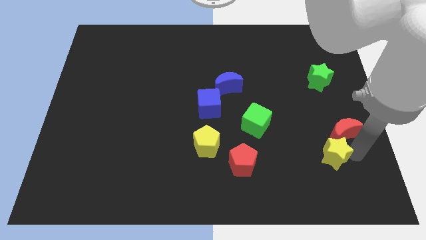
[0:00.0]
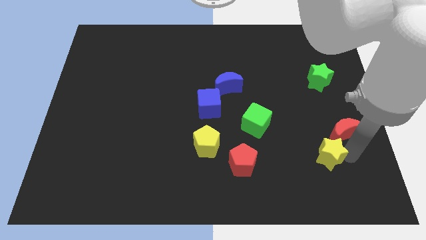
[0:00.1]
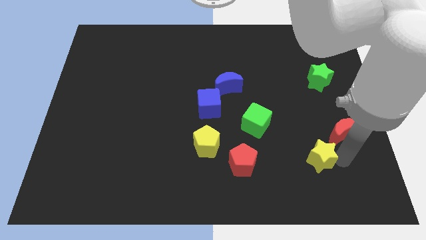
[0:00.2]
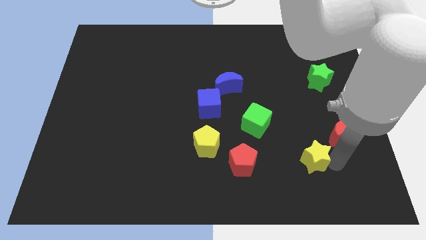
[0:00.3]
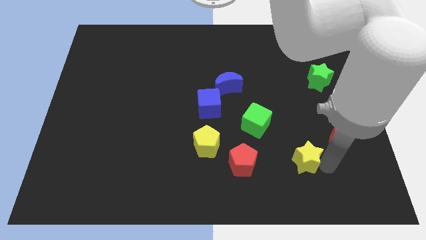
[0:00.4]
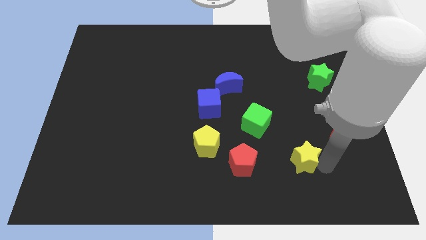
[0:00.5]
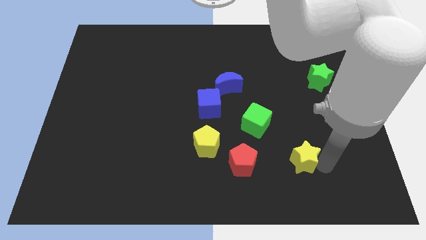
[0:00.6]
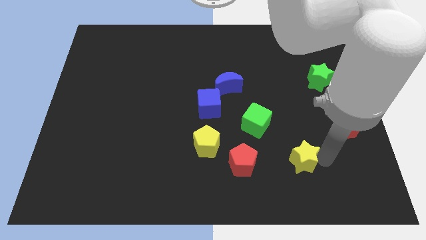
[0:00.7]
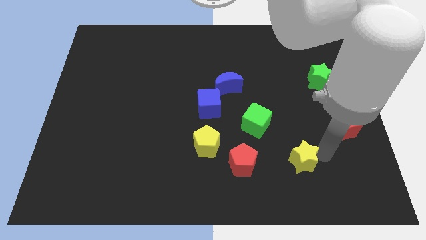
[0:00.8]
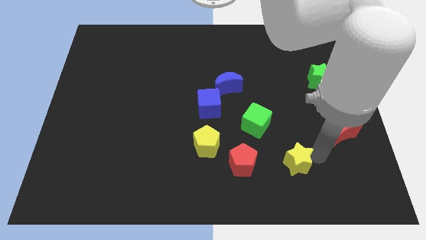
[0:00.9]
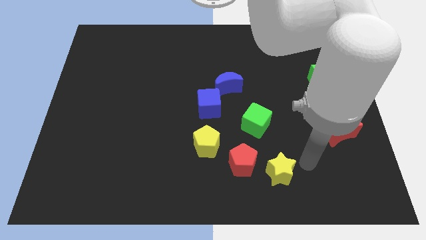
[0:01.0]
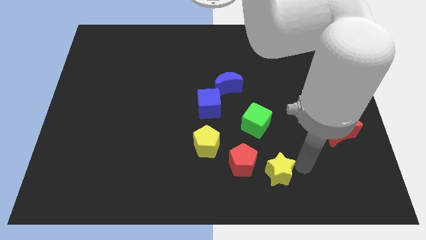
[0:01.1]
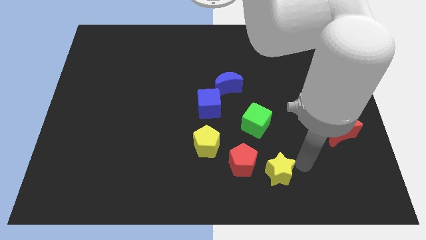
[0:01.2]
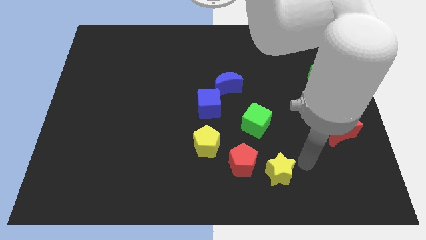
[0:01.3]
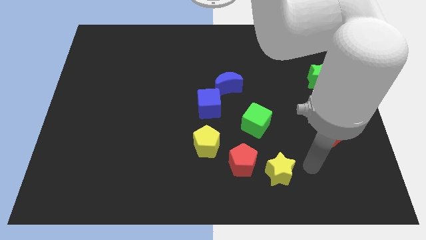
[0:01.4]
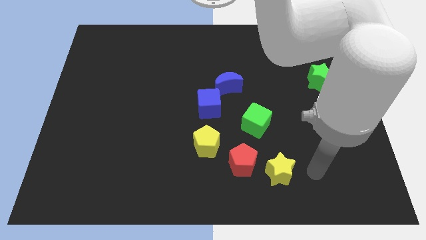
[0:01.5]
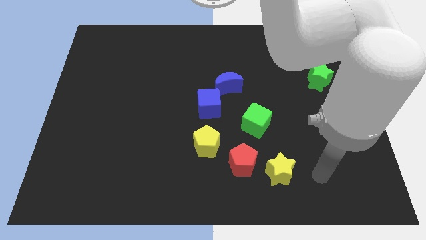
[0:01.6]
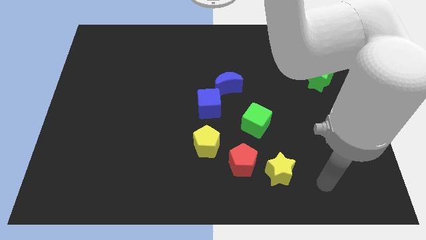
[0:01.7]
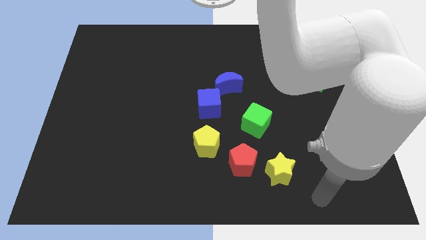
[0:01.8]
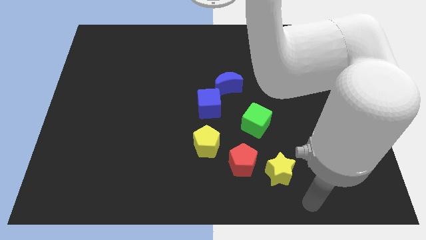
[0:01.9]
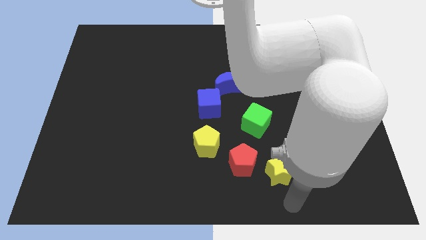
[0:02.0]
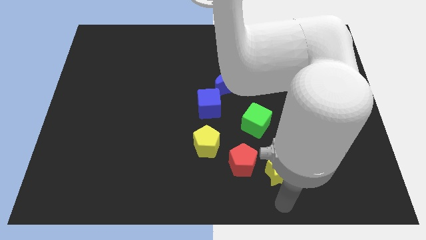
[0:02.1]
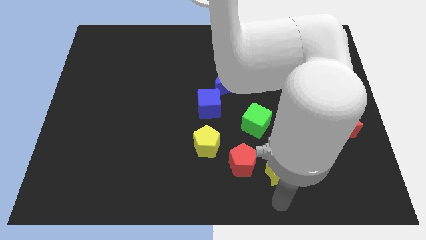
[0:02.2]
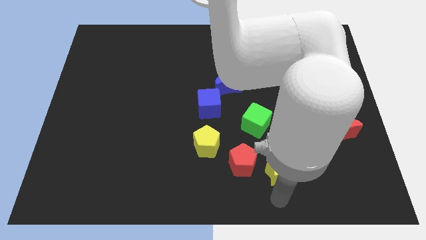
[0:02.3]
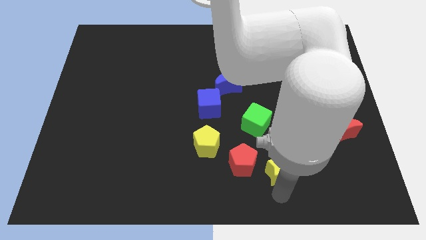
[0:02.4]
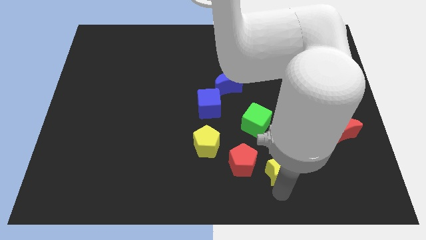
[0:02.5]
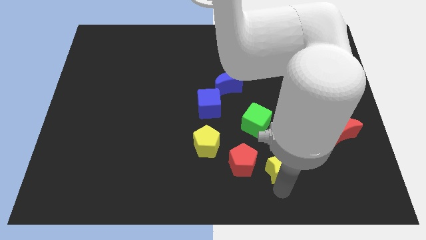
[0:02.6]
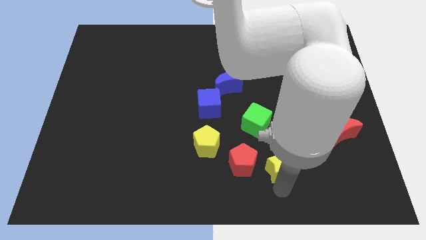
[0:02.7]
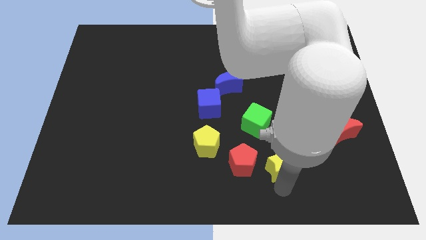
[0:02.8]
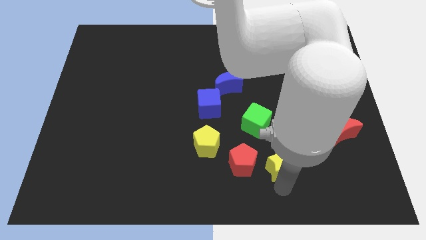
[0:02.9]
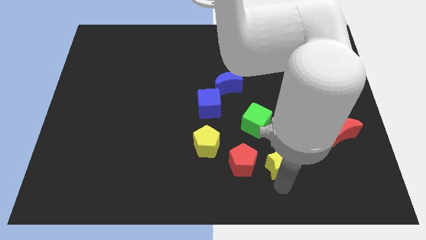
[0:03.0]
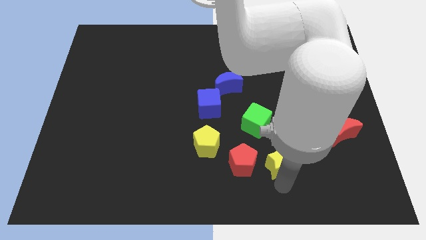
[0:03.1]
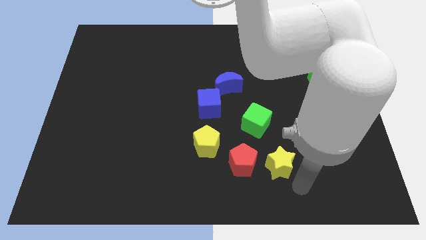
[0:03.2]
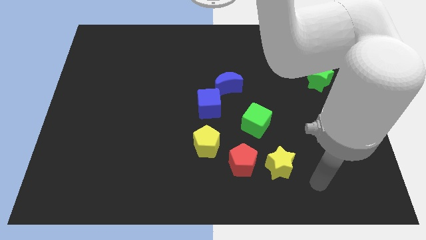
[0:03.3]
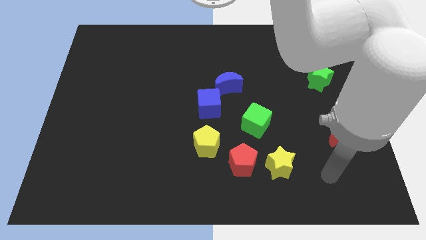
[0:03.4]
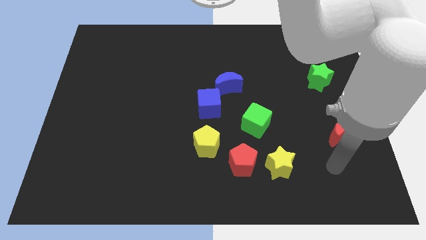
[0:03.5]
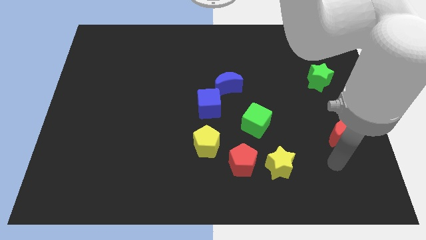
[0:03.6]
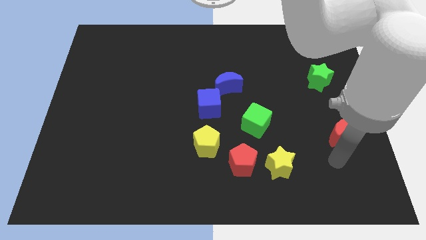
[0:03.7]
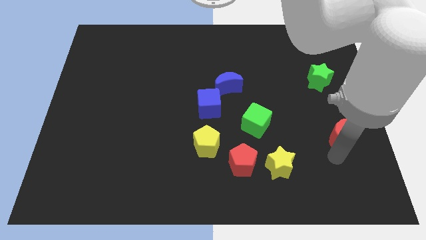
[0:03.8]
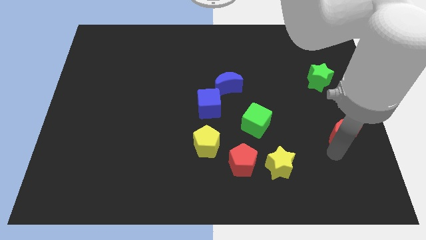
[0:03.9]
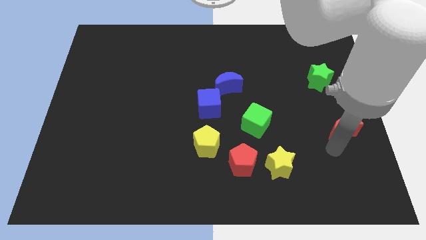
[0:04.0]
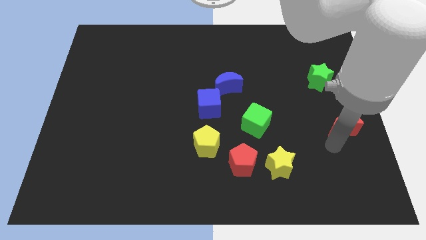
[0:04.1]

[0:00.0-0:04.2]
place the yellow star to the right side of red pentagon

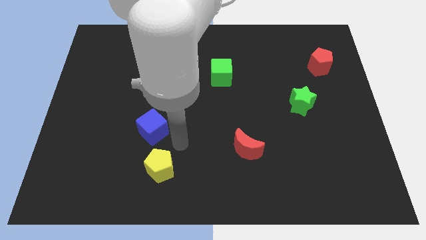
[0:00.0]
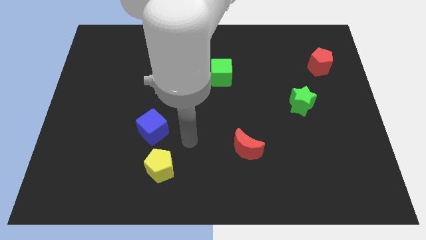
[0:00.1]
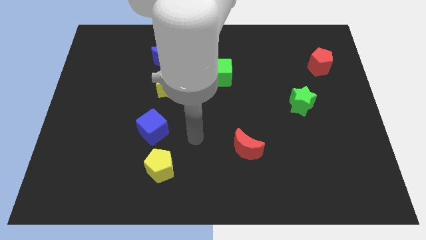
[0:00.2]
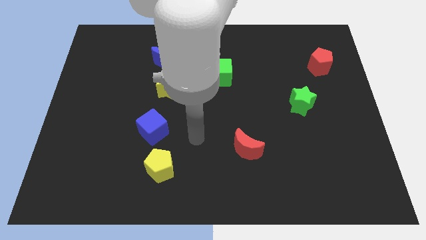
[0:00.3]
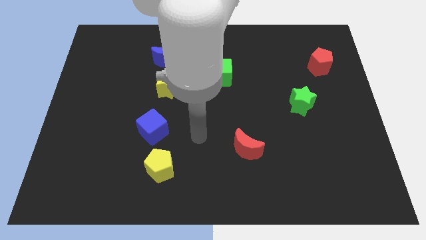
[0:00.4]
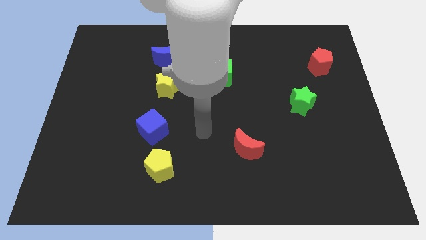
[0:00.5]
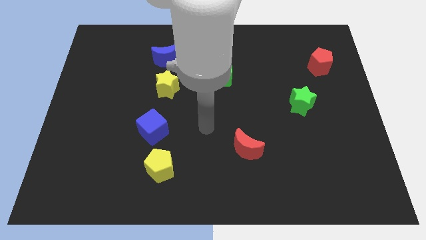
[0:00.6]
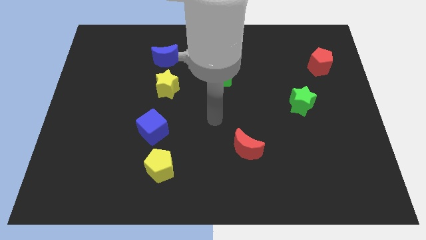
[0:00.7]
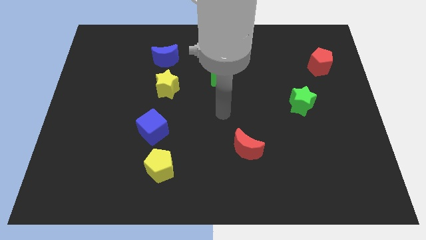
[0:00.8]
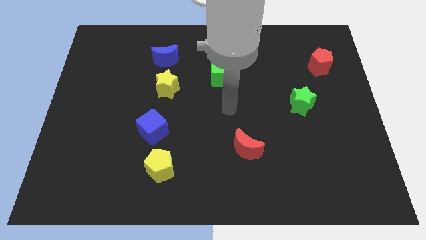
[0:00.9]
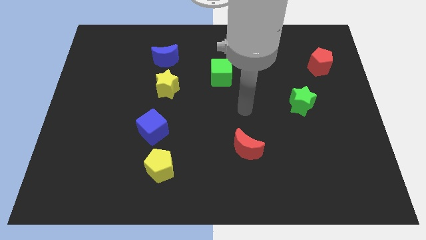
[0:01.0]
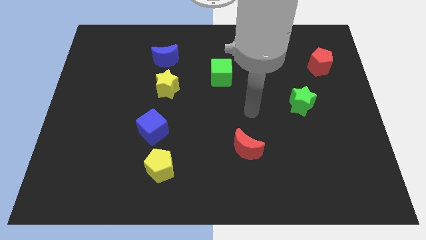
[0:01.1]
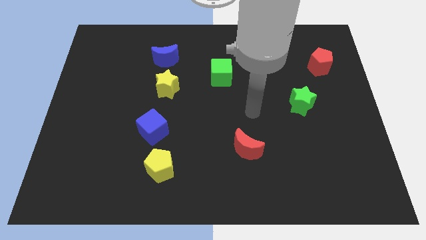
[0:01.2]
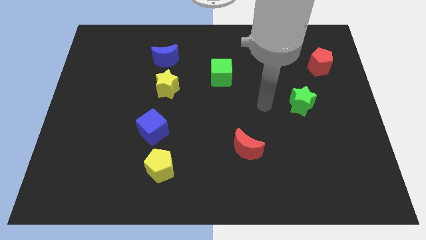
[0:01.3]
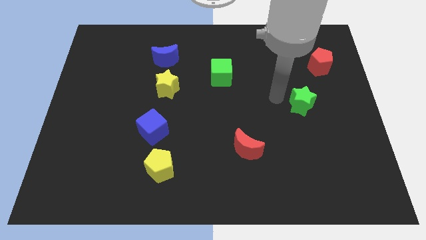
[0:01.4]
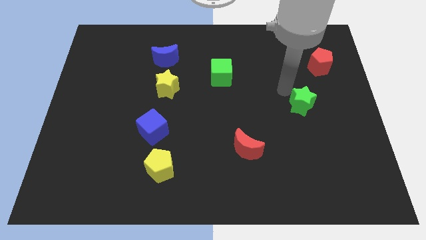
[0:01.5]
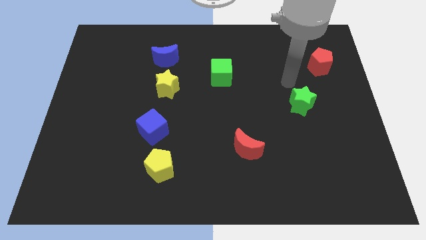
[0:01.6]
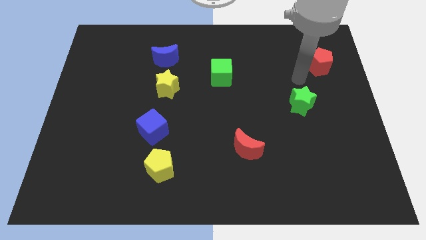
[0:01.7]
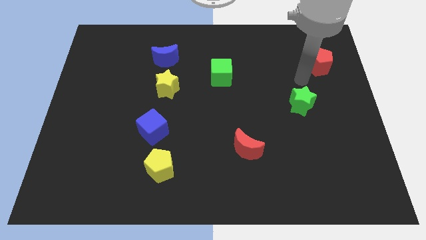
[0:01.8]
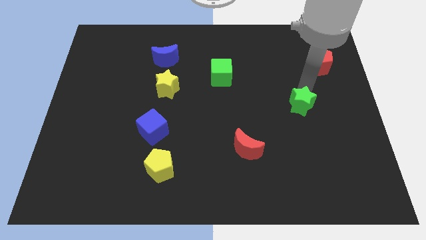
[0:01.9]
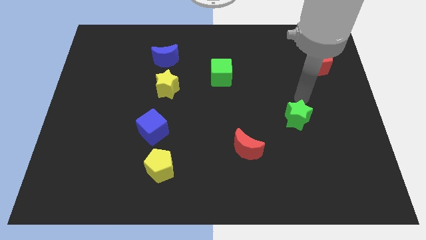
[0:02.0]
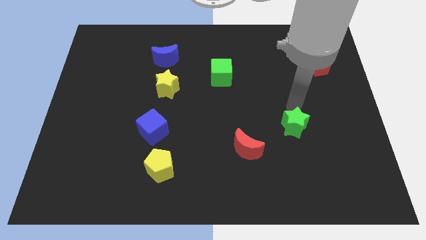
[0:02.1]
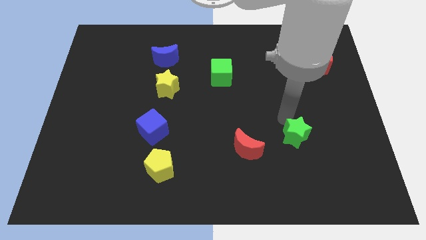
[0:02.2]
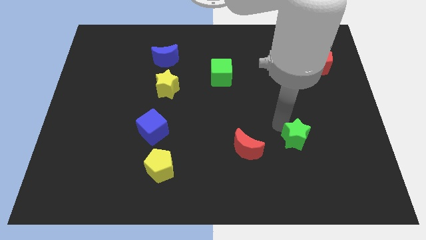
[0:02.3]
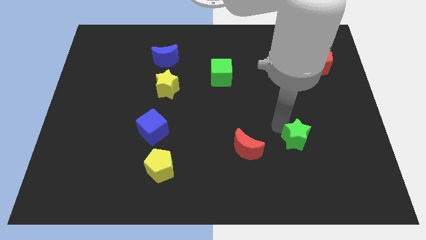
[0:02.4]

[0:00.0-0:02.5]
place green star beside red crescent

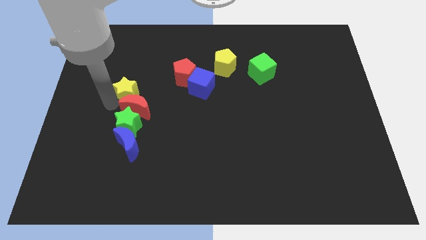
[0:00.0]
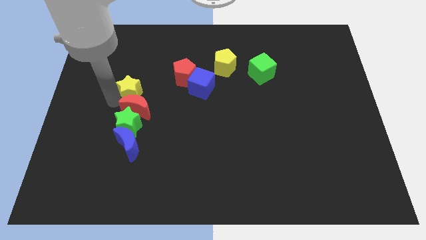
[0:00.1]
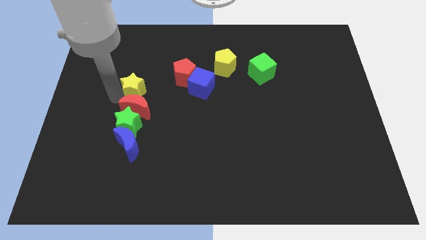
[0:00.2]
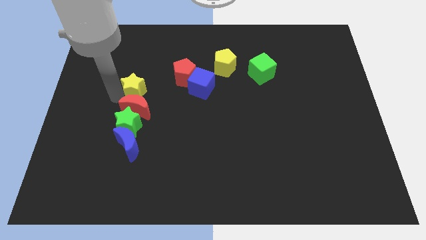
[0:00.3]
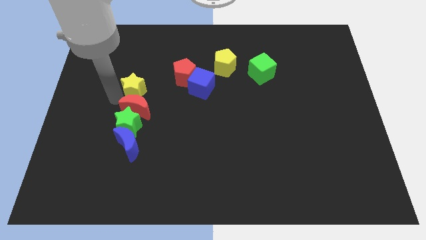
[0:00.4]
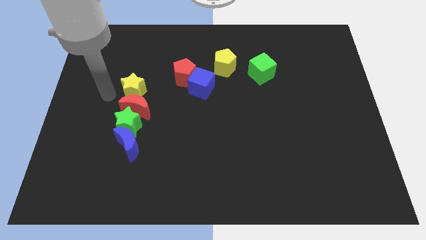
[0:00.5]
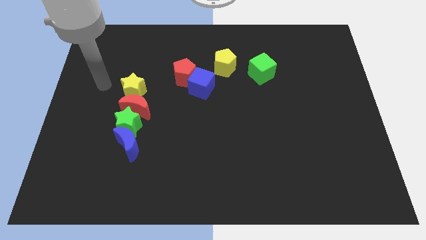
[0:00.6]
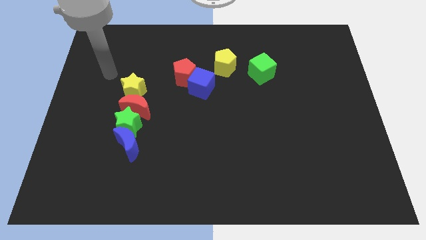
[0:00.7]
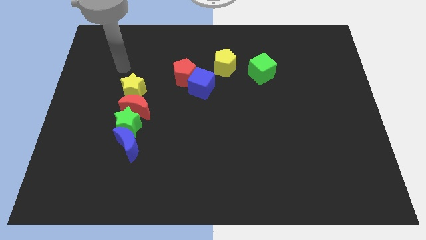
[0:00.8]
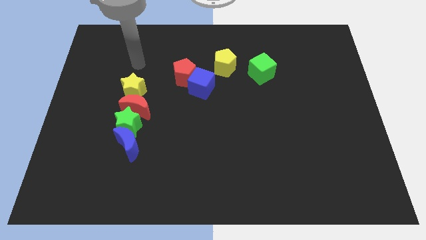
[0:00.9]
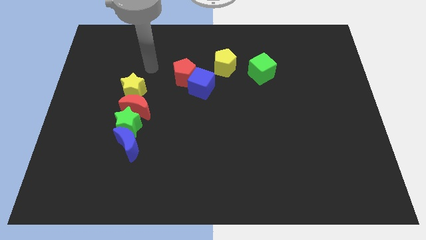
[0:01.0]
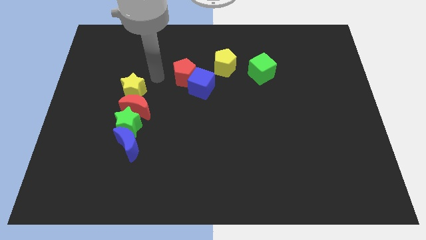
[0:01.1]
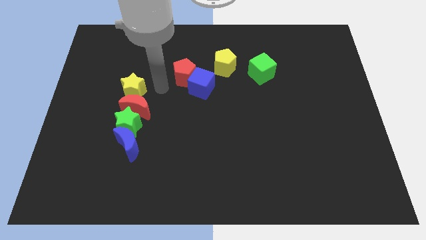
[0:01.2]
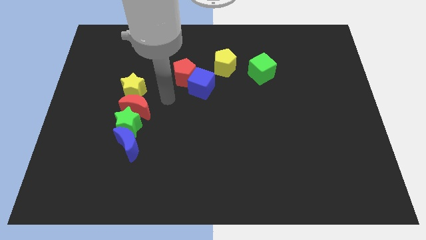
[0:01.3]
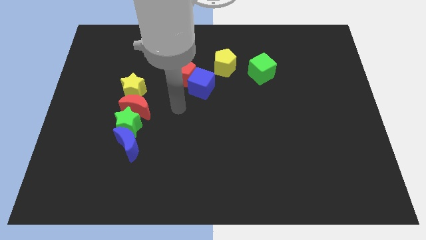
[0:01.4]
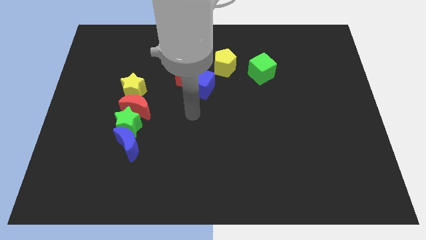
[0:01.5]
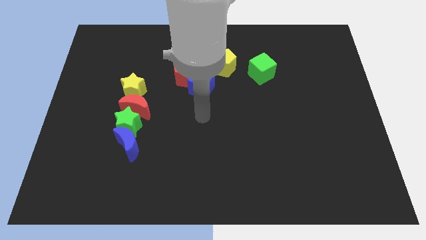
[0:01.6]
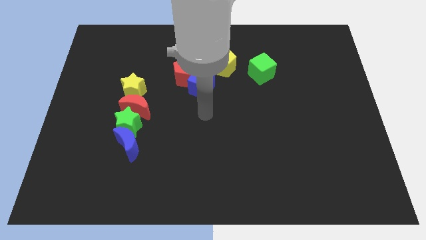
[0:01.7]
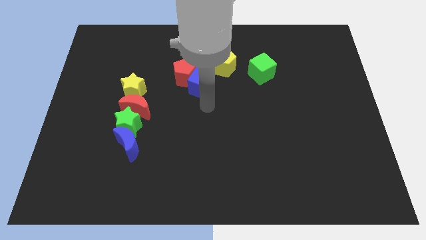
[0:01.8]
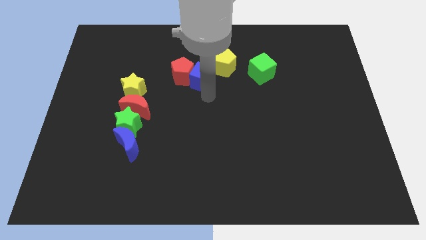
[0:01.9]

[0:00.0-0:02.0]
place the yellow star correctly above the red moon

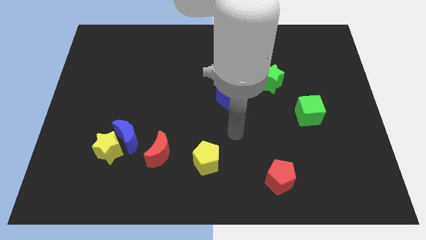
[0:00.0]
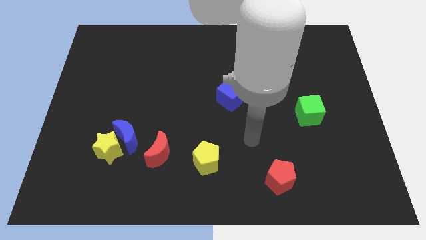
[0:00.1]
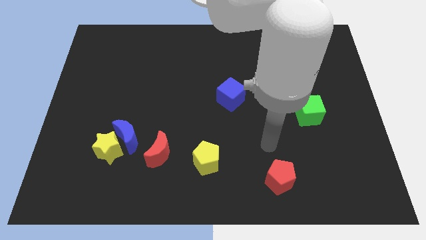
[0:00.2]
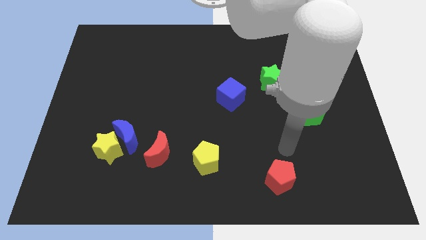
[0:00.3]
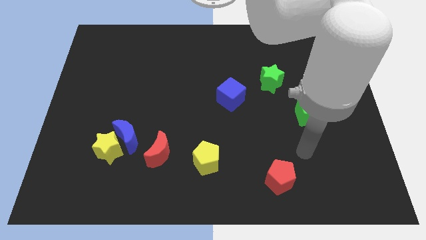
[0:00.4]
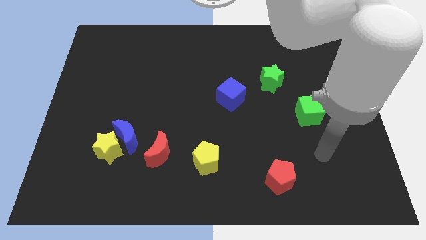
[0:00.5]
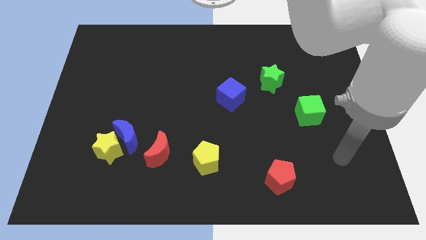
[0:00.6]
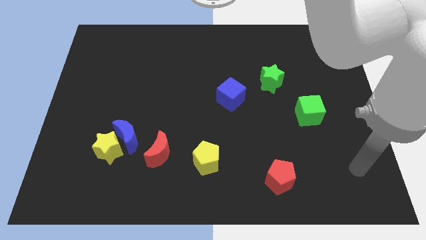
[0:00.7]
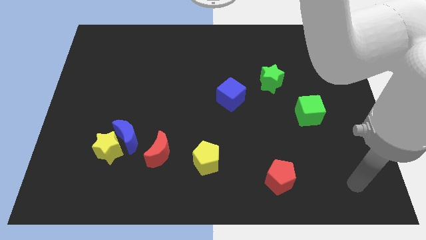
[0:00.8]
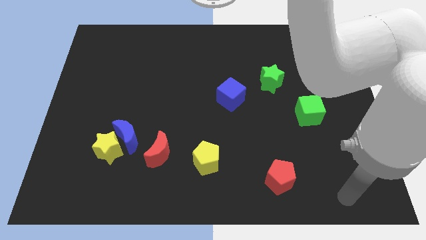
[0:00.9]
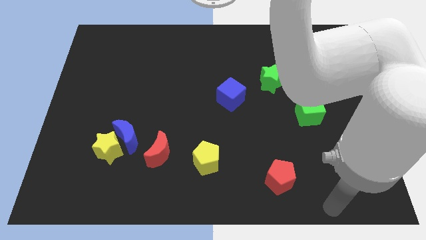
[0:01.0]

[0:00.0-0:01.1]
move your arm away from the bottom side of the blue cube
